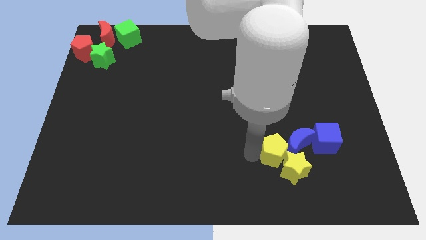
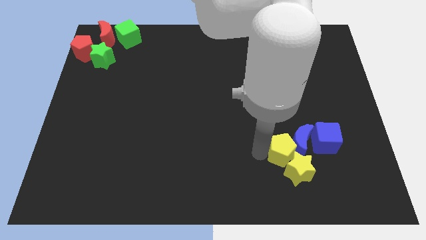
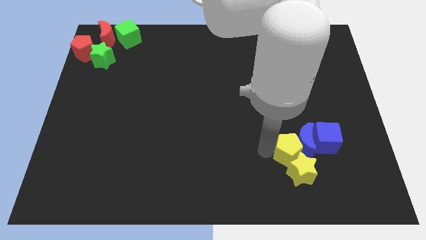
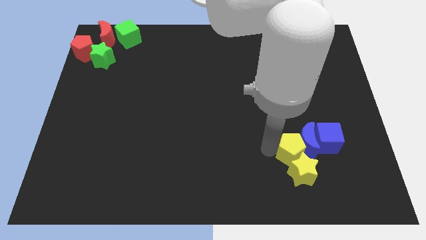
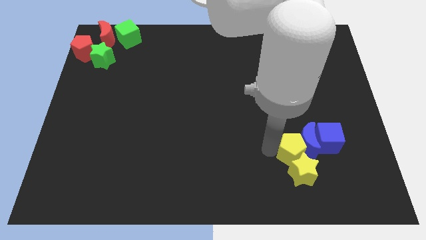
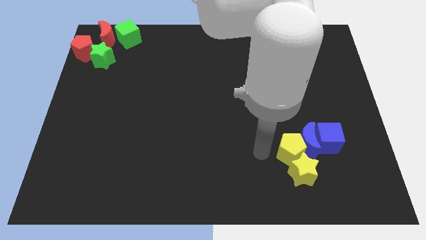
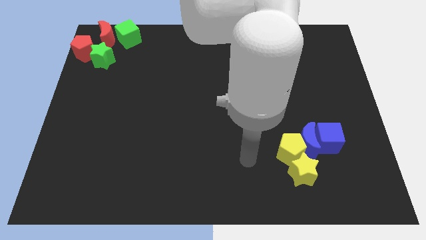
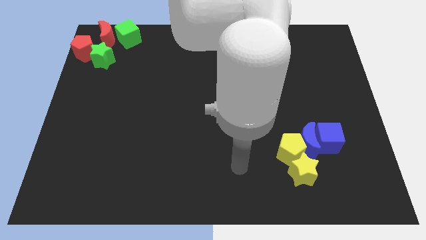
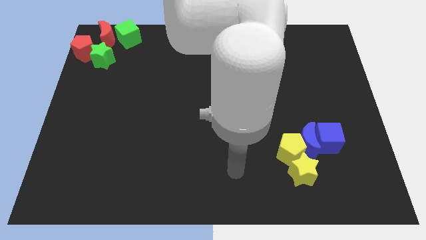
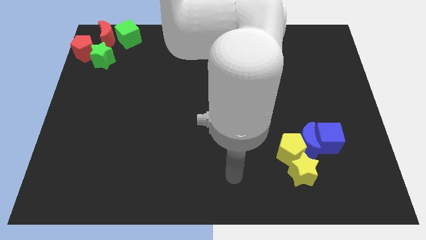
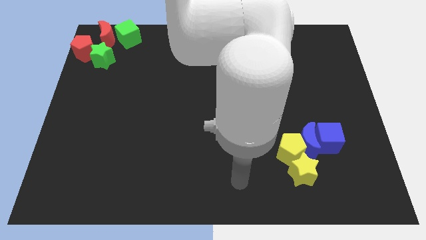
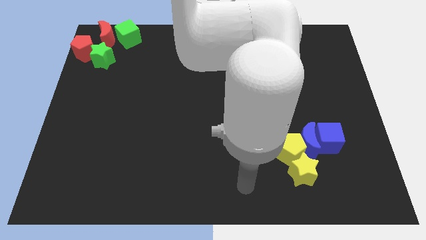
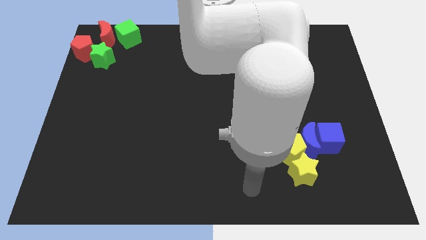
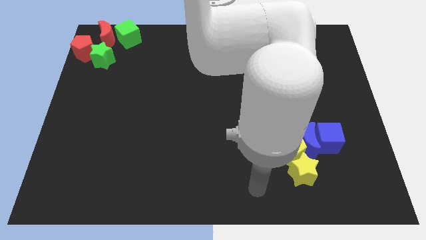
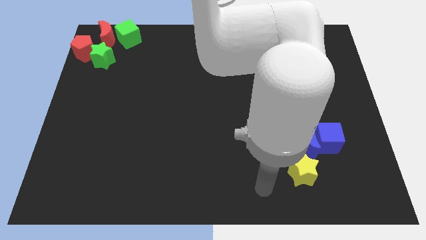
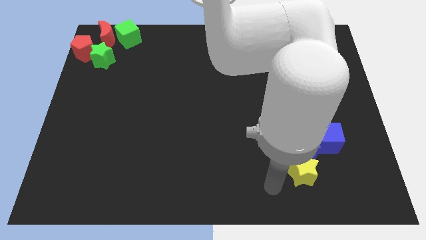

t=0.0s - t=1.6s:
move yourself away from the yellow pentagon

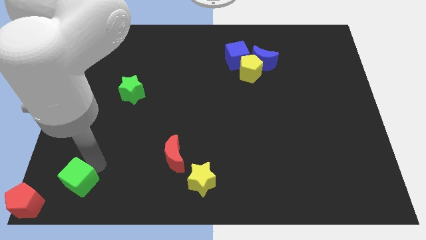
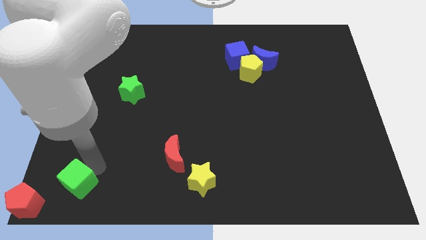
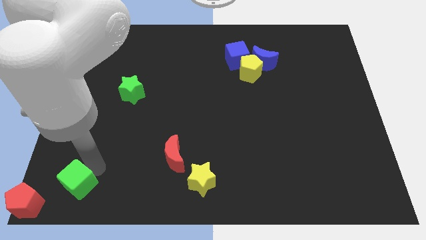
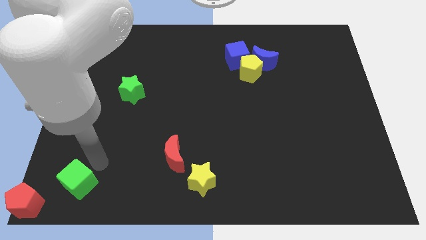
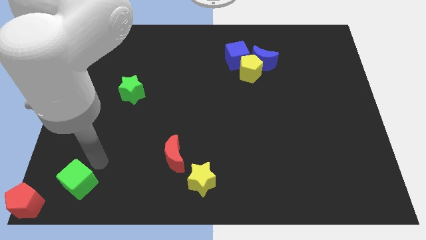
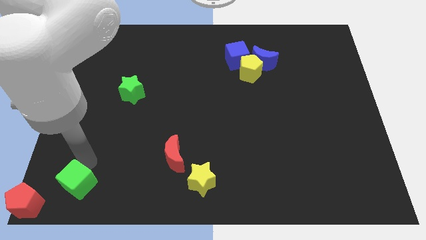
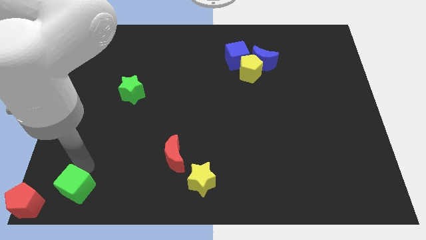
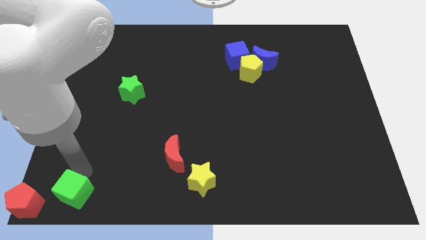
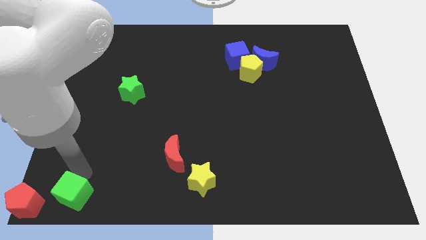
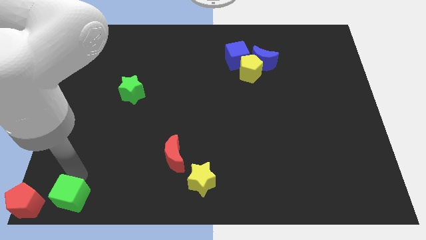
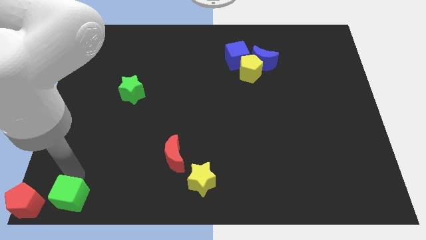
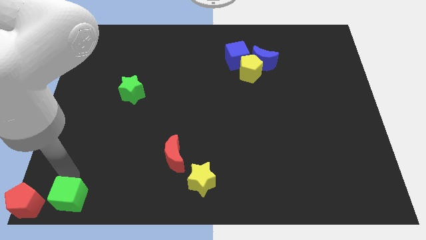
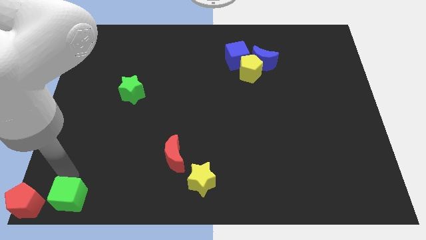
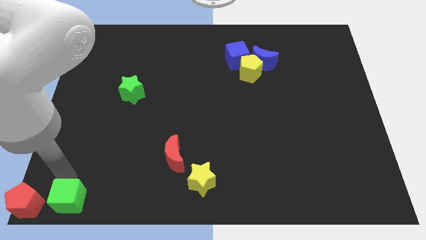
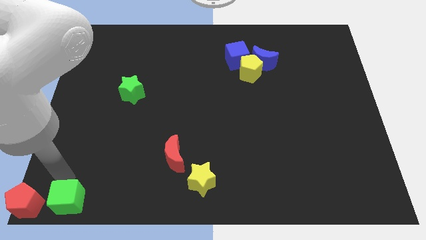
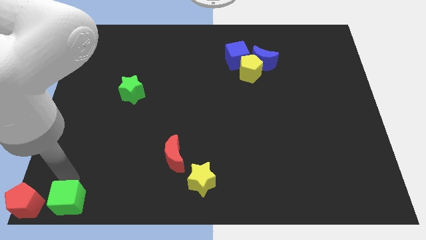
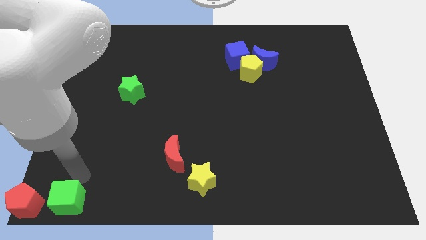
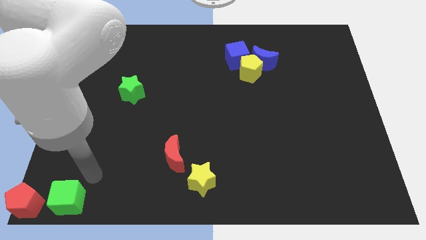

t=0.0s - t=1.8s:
move the green cube to the right of the red pentagon

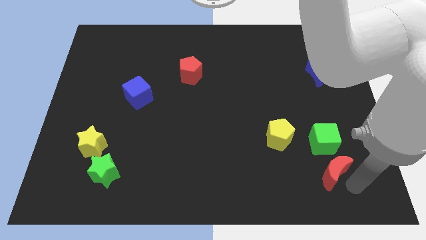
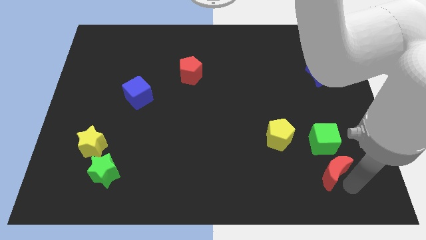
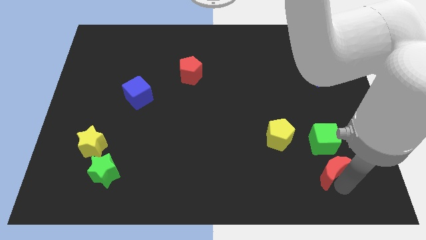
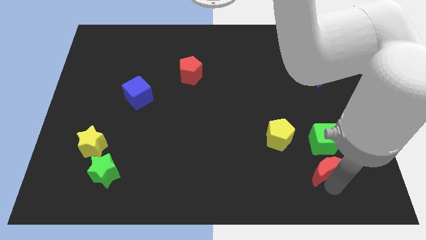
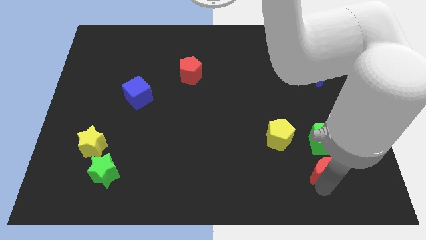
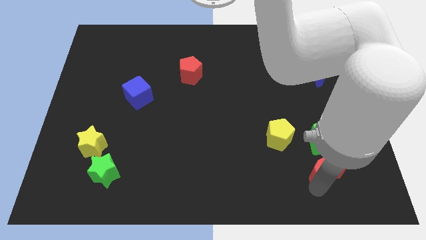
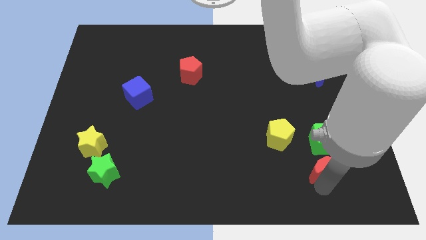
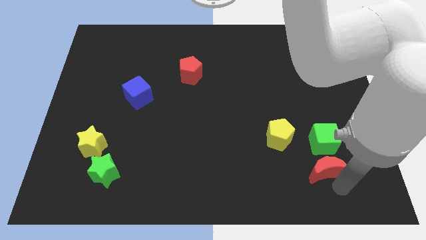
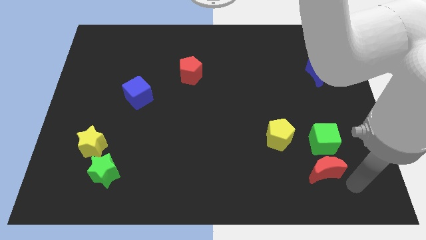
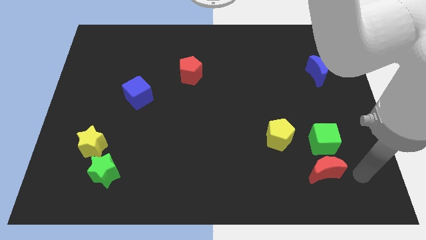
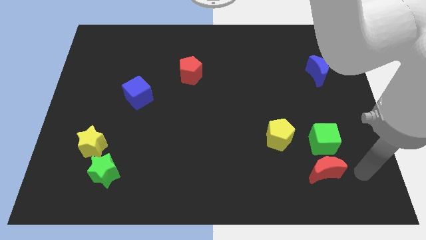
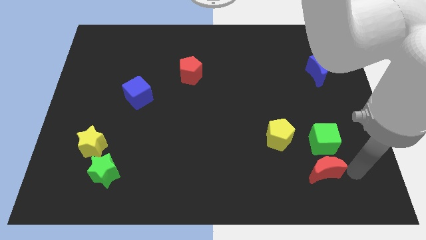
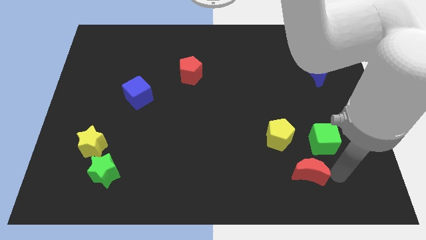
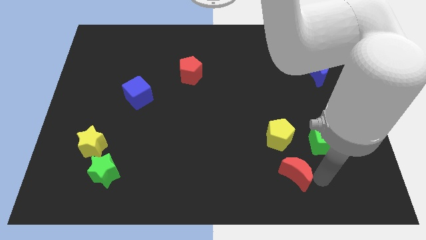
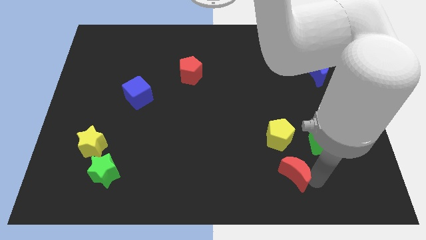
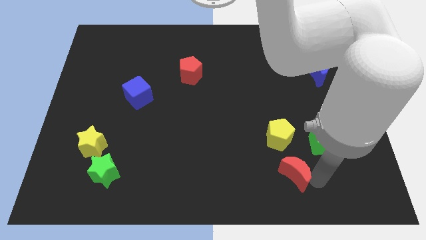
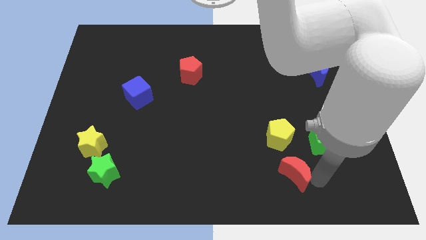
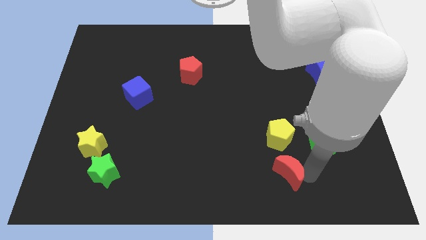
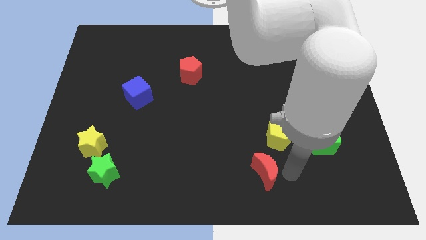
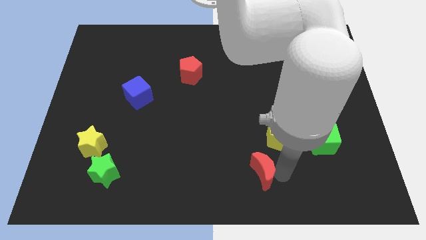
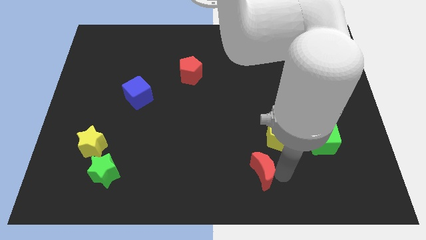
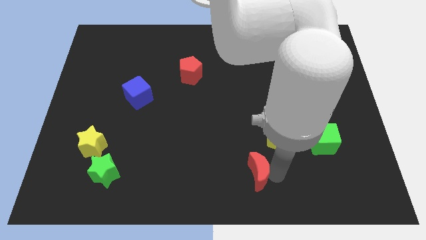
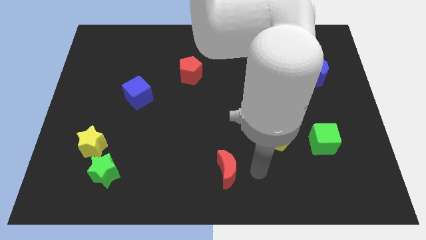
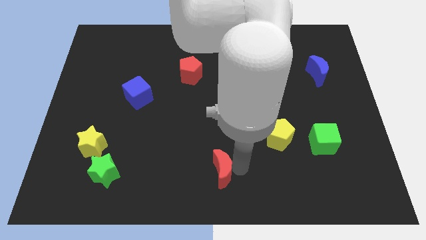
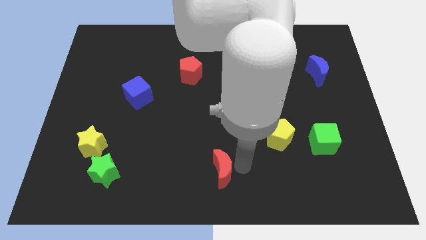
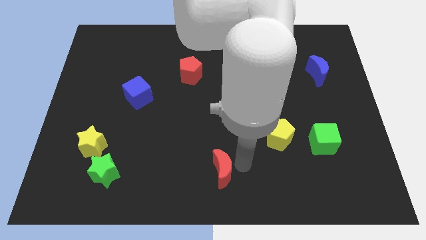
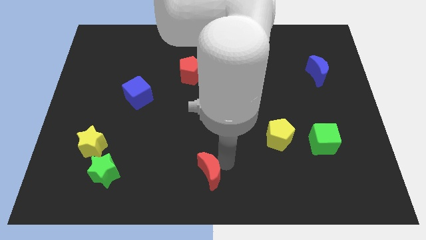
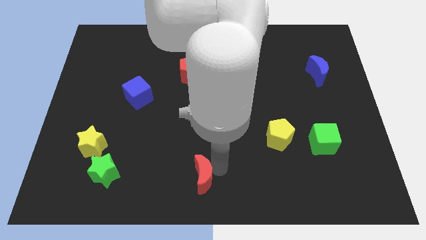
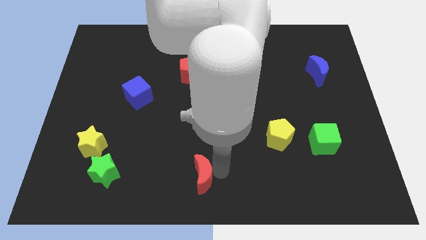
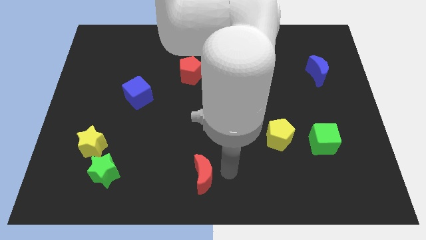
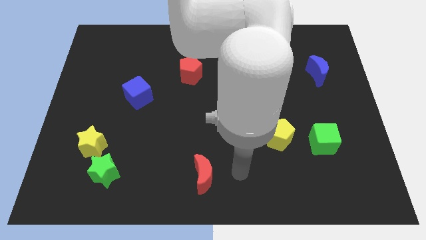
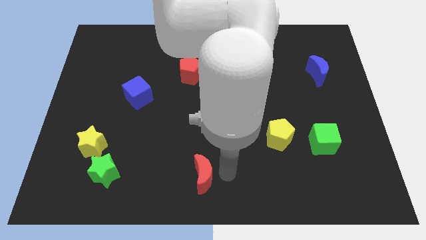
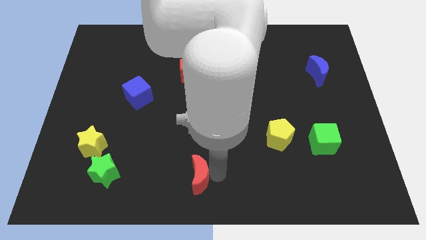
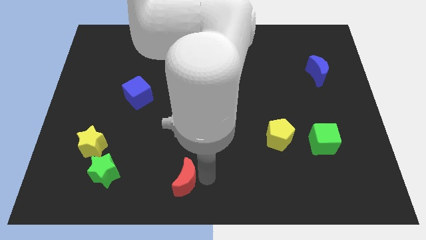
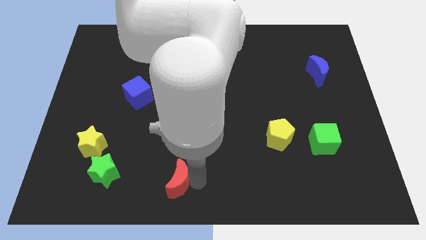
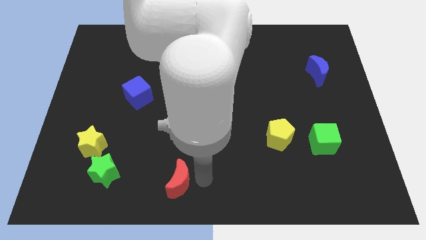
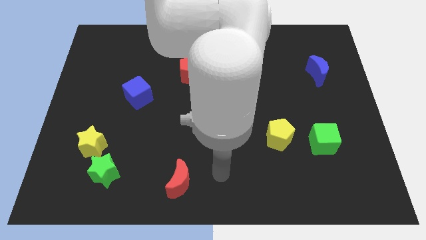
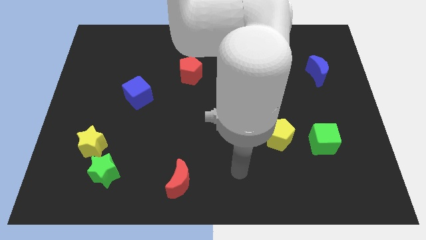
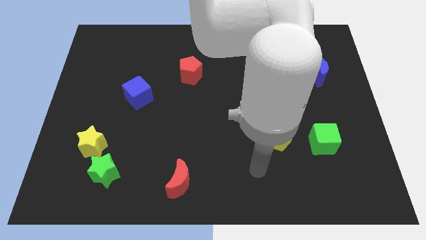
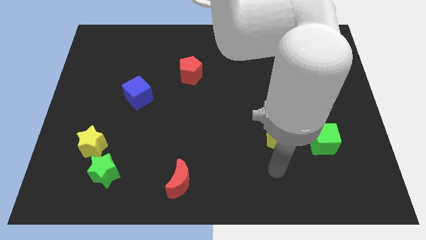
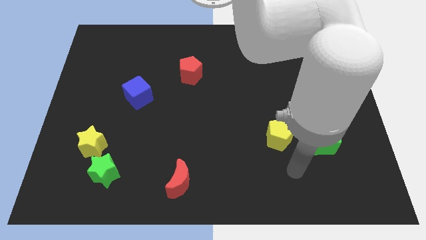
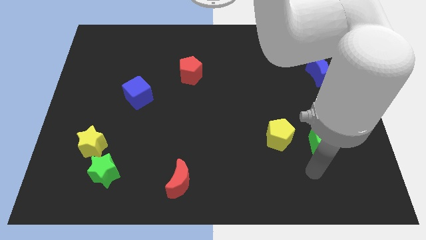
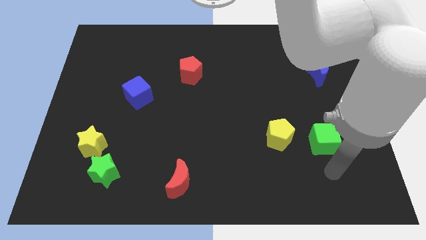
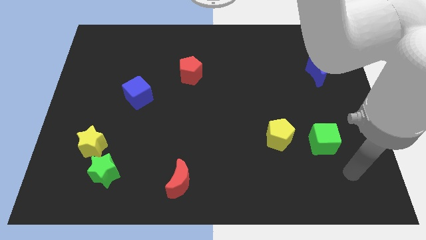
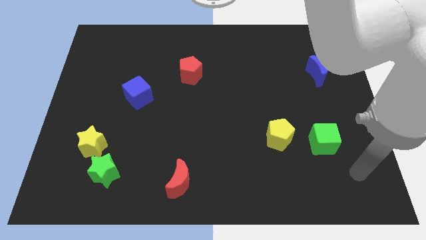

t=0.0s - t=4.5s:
place the red crescent to the right of the green star

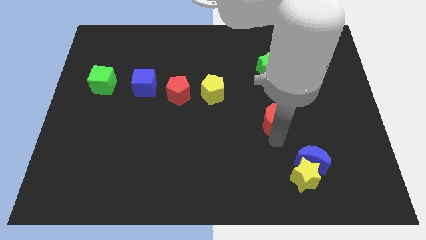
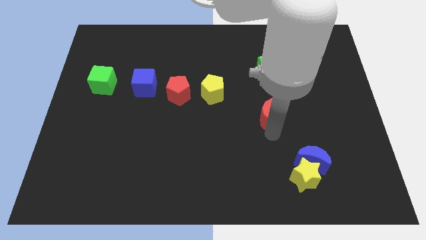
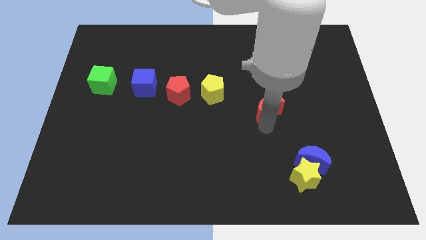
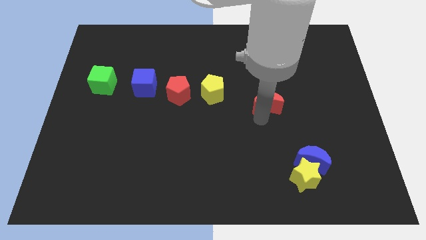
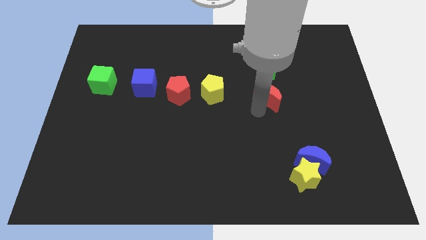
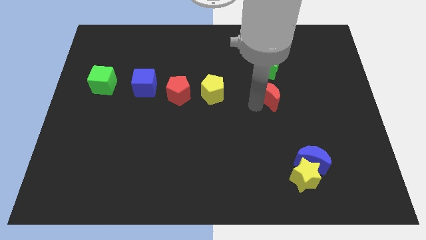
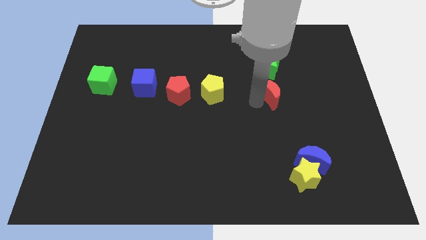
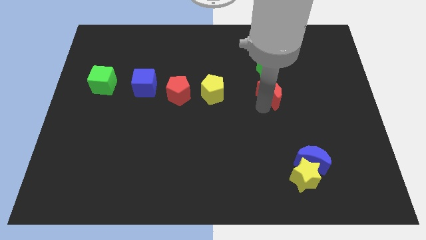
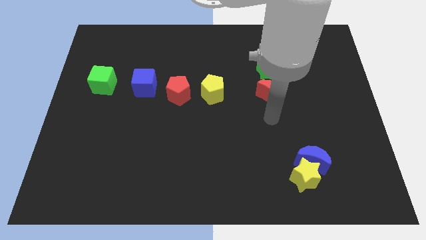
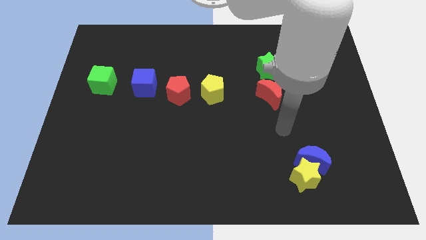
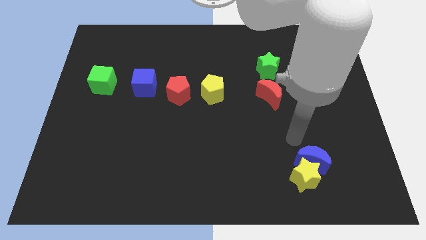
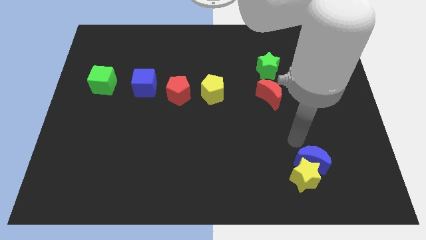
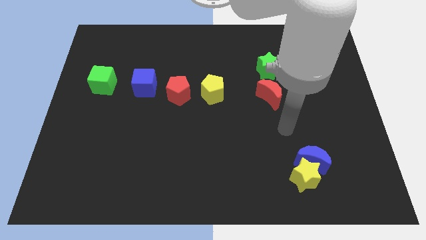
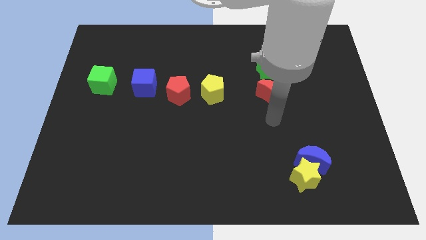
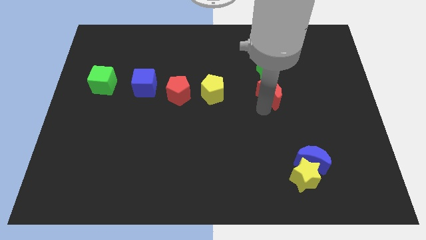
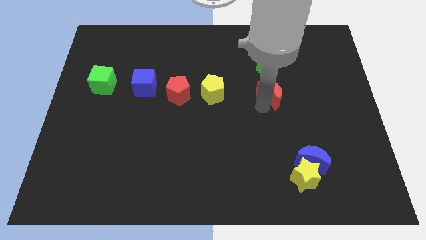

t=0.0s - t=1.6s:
place the red moon to the right of the yellow pentagon
